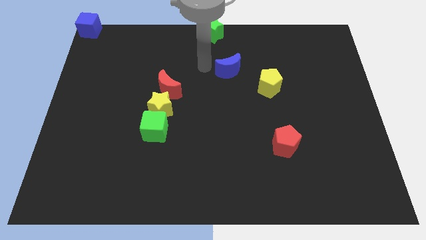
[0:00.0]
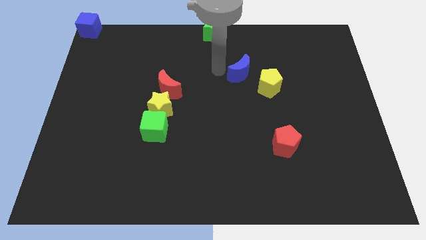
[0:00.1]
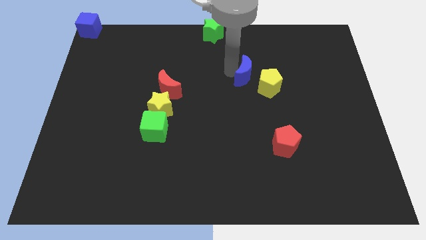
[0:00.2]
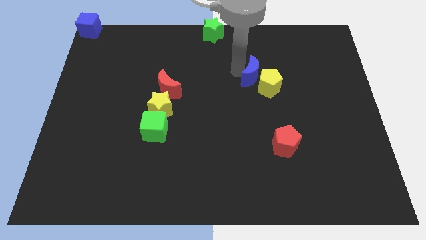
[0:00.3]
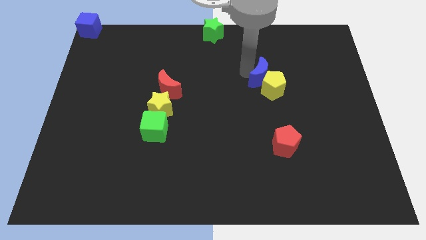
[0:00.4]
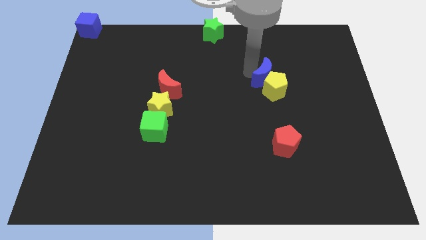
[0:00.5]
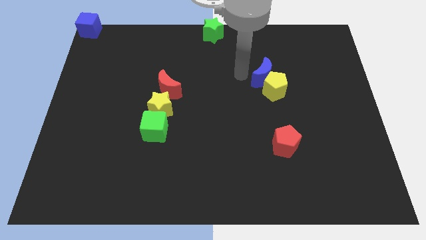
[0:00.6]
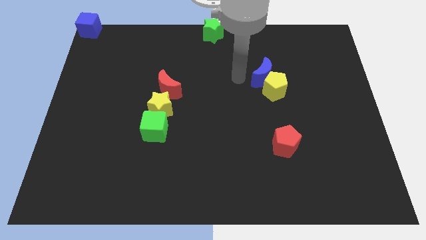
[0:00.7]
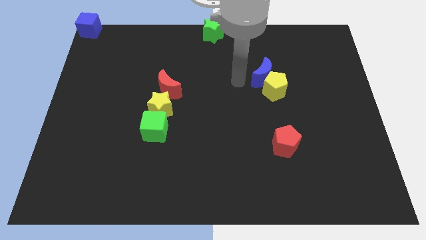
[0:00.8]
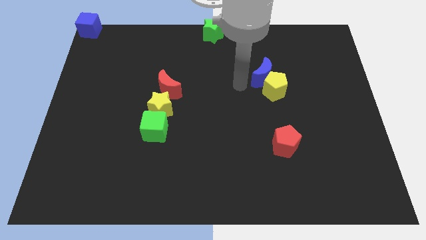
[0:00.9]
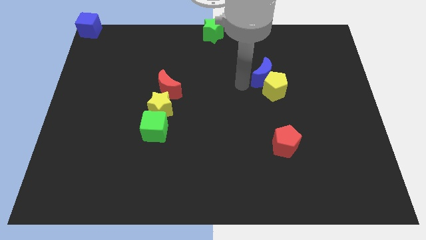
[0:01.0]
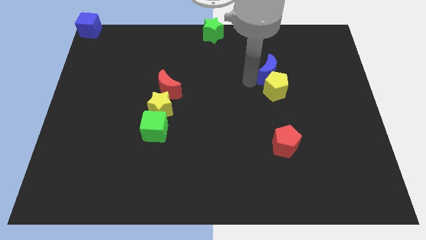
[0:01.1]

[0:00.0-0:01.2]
move the blue crescent to the left of the yellow pentagon

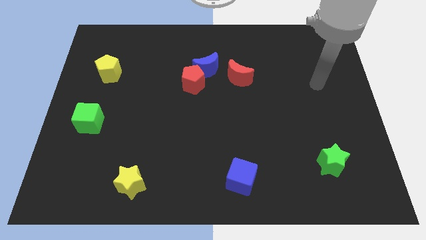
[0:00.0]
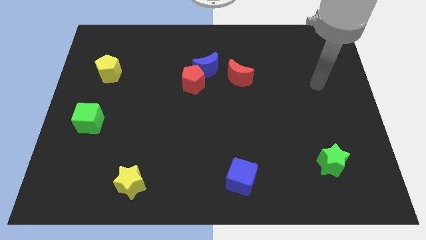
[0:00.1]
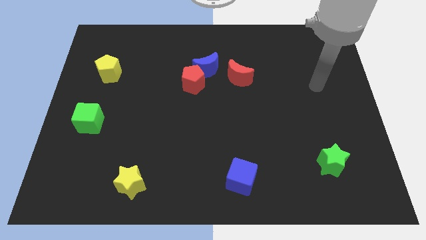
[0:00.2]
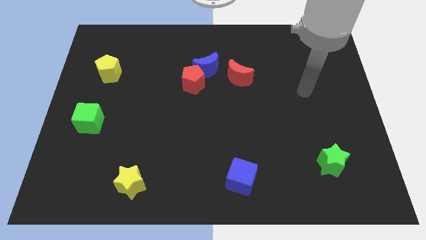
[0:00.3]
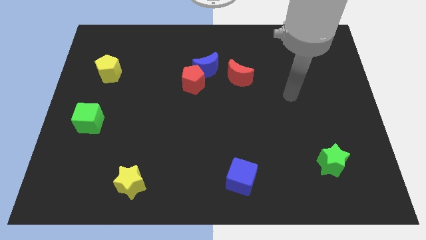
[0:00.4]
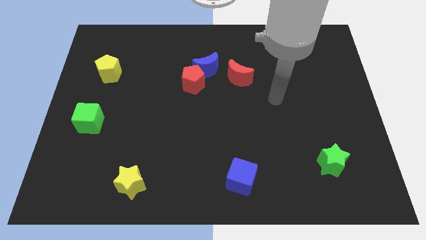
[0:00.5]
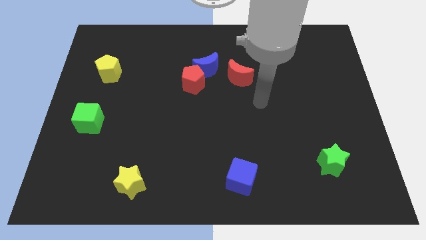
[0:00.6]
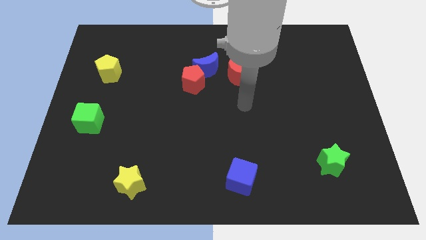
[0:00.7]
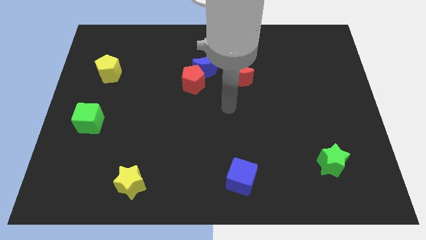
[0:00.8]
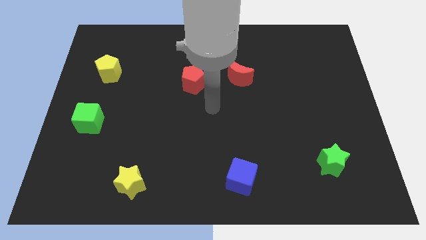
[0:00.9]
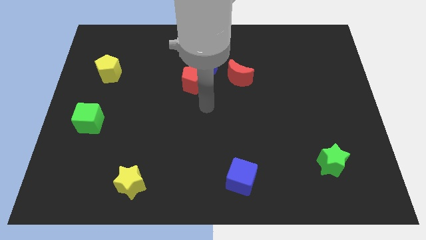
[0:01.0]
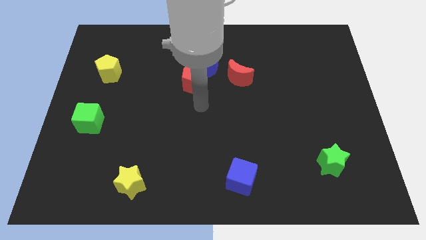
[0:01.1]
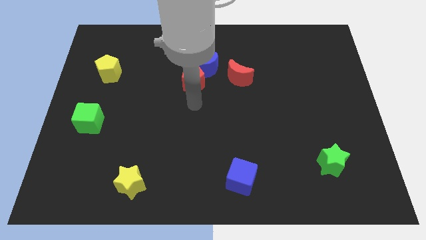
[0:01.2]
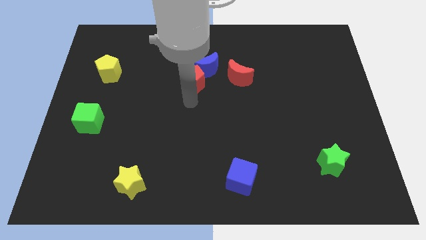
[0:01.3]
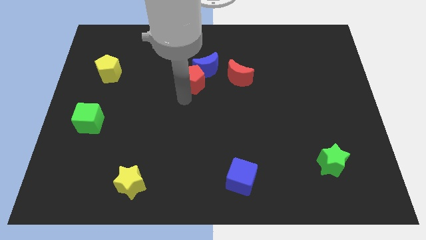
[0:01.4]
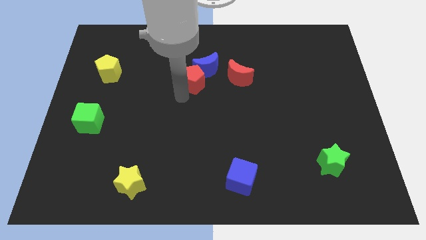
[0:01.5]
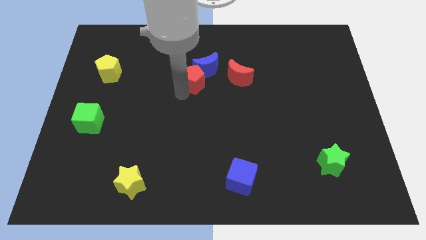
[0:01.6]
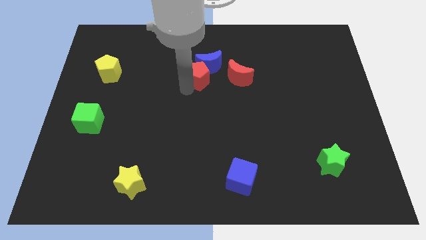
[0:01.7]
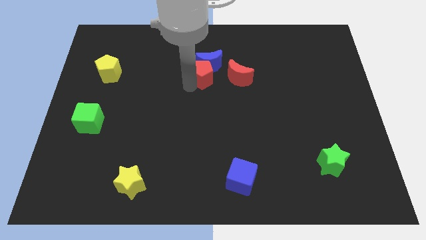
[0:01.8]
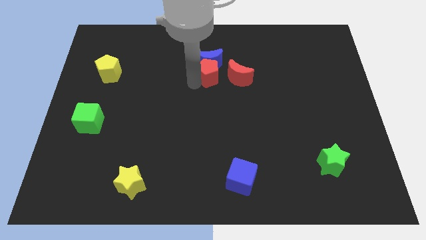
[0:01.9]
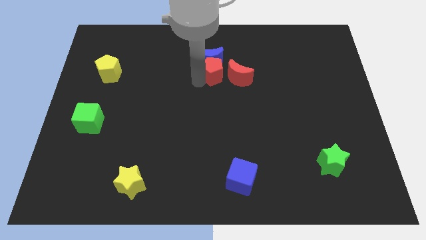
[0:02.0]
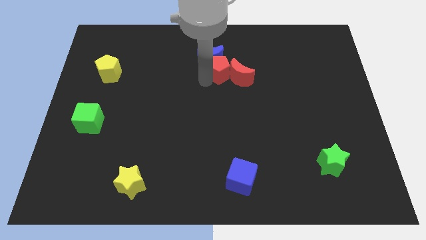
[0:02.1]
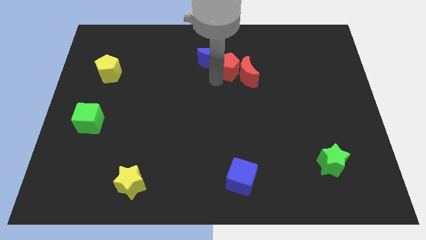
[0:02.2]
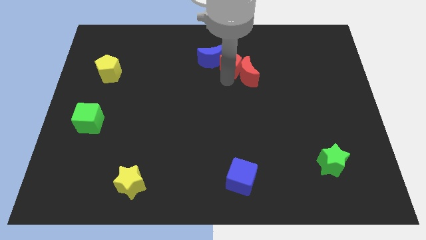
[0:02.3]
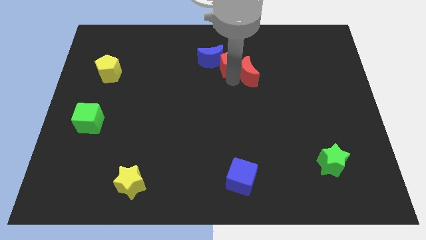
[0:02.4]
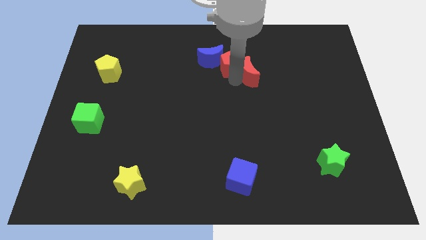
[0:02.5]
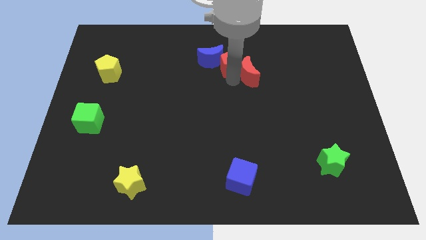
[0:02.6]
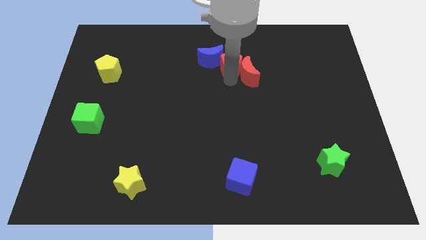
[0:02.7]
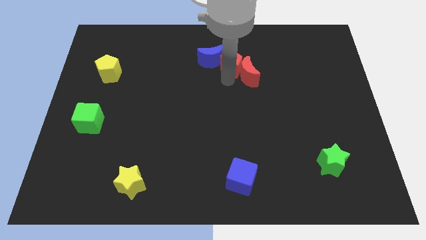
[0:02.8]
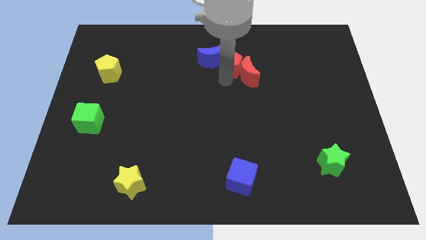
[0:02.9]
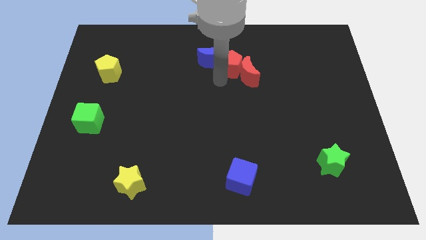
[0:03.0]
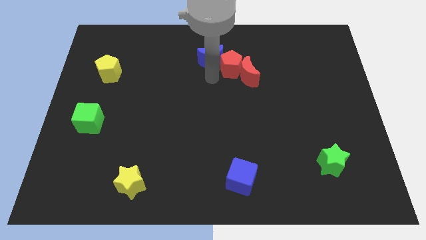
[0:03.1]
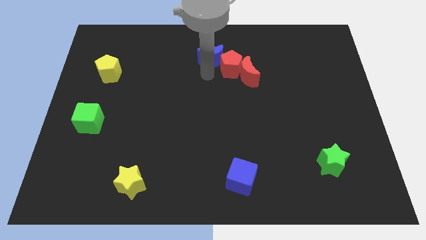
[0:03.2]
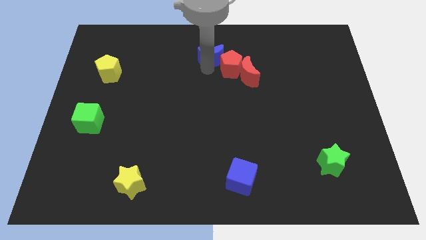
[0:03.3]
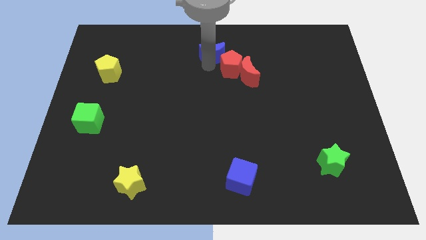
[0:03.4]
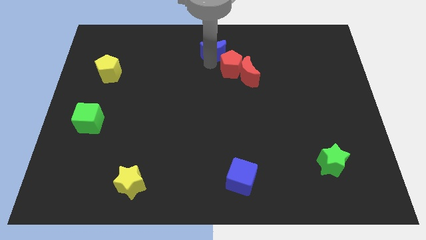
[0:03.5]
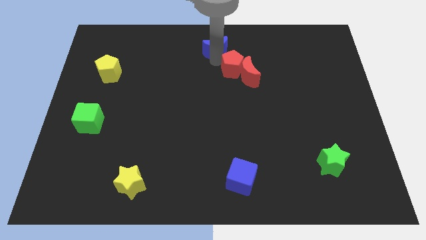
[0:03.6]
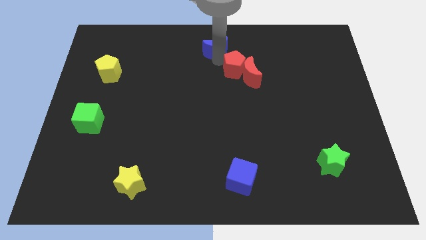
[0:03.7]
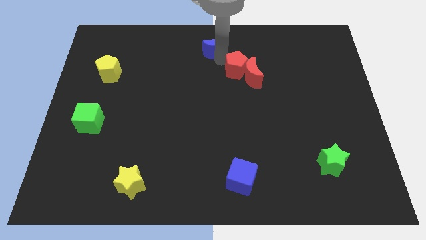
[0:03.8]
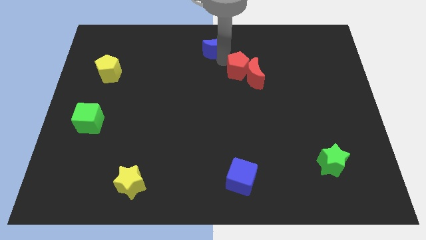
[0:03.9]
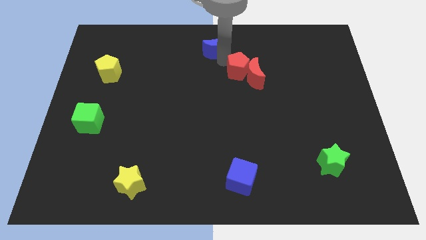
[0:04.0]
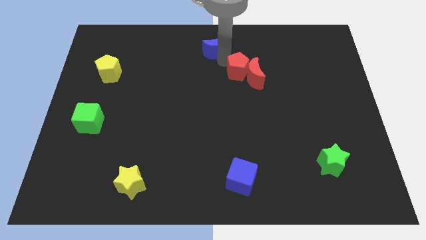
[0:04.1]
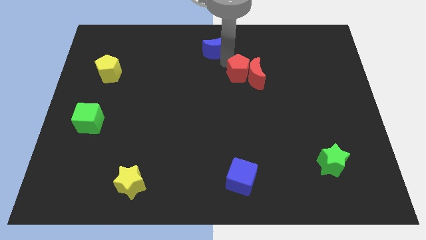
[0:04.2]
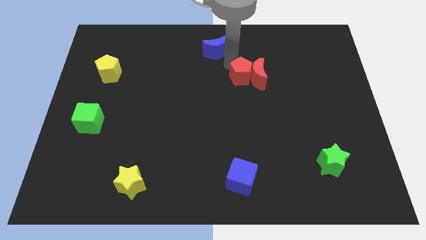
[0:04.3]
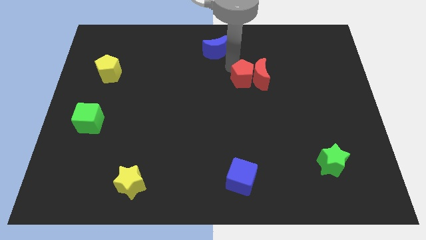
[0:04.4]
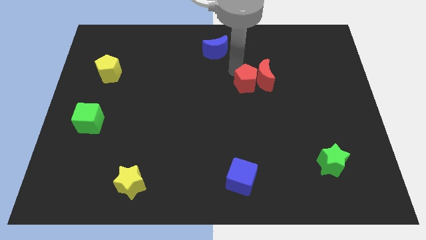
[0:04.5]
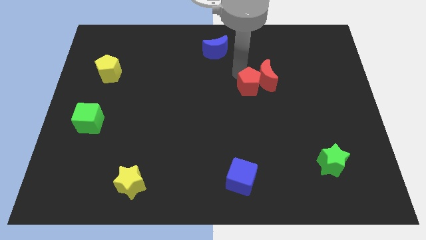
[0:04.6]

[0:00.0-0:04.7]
separate the red blocks from the blue moon

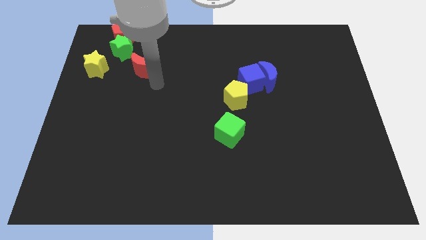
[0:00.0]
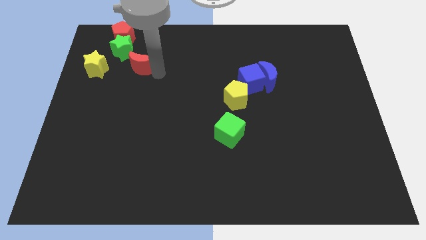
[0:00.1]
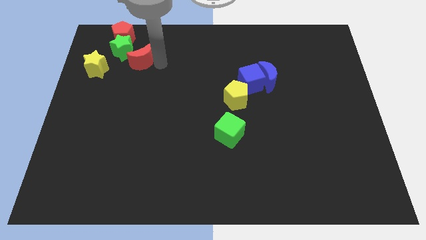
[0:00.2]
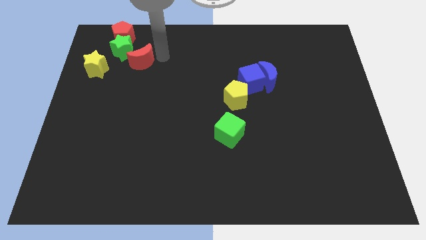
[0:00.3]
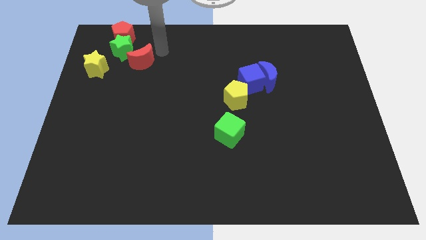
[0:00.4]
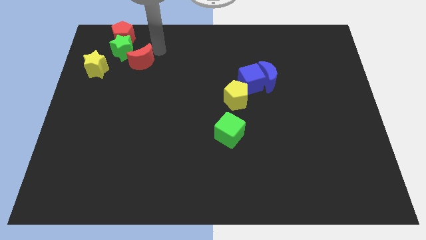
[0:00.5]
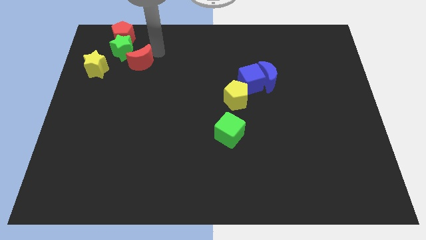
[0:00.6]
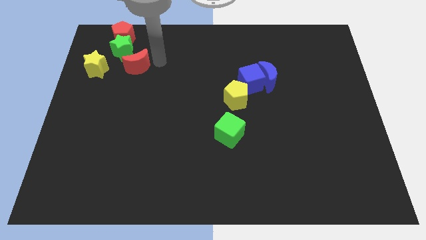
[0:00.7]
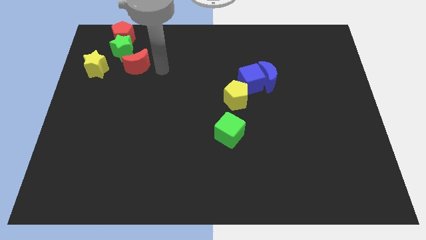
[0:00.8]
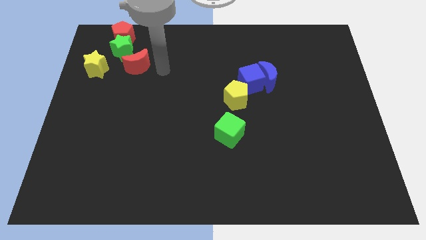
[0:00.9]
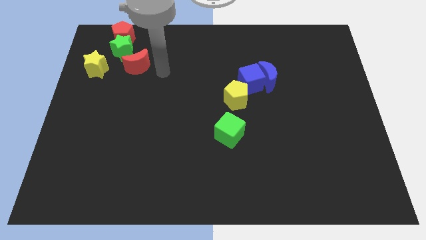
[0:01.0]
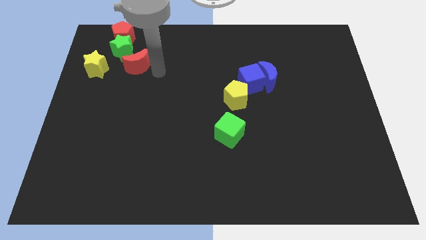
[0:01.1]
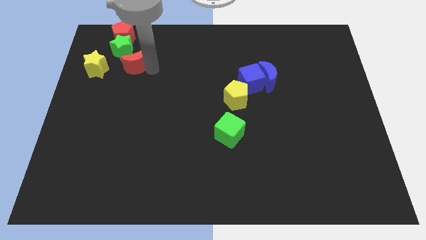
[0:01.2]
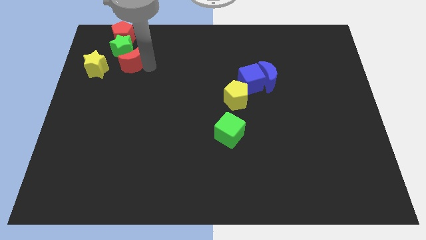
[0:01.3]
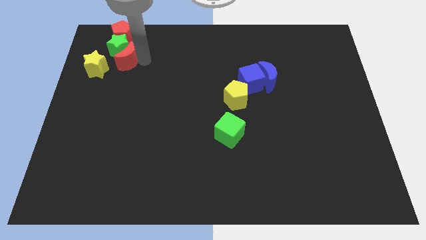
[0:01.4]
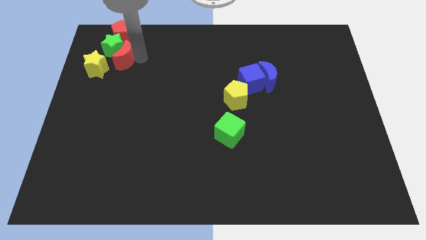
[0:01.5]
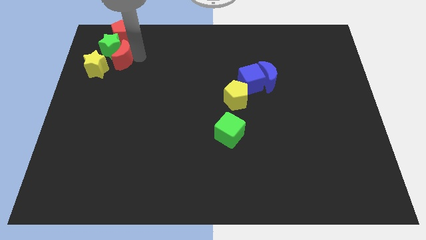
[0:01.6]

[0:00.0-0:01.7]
push the red moon into the green star

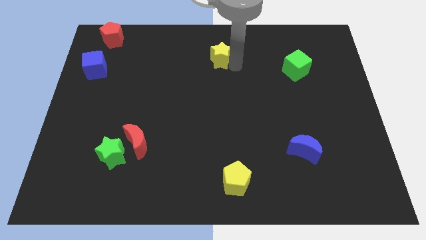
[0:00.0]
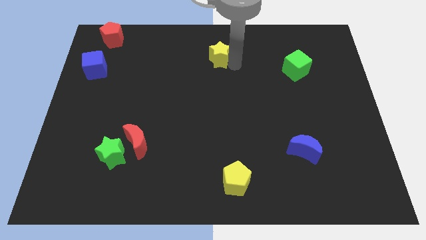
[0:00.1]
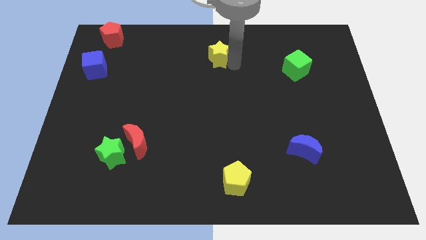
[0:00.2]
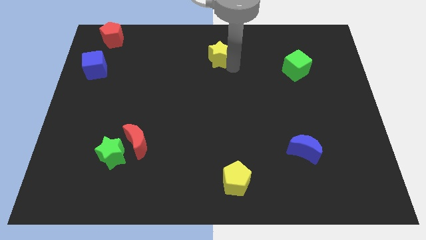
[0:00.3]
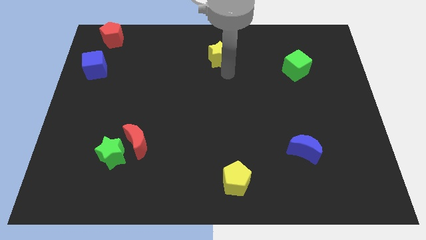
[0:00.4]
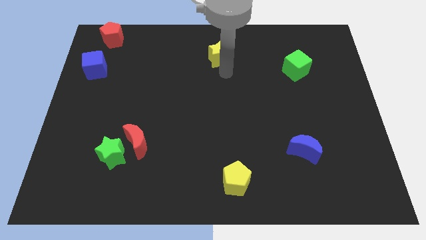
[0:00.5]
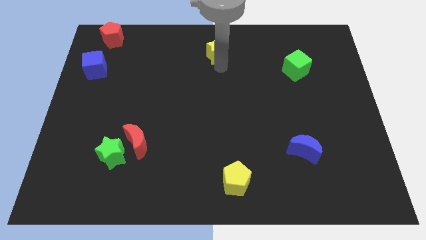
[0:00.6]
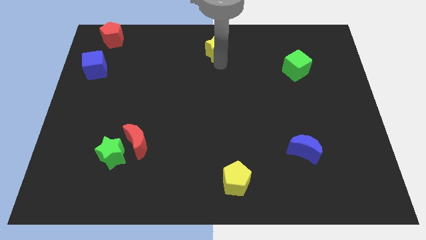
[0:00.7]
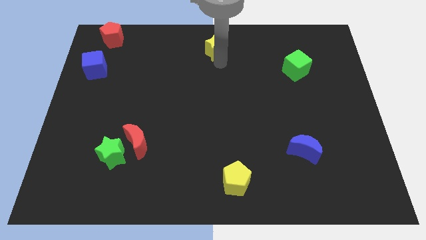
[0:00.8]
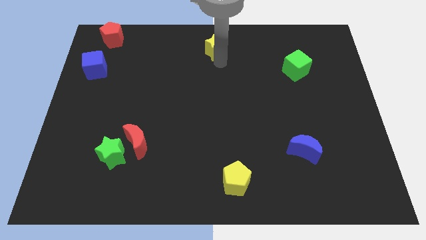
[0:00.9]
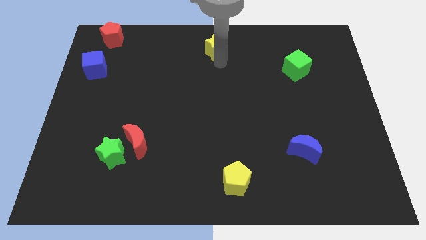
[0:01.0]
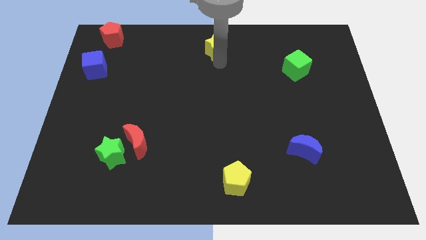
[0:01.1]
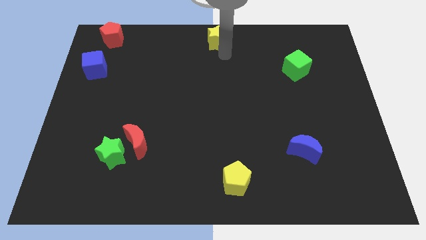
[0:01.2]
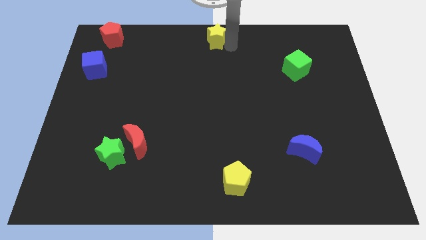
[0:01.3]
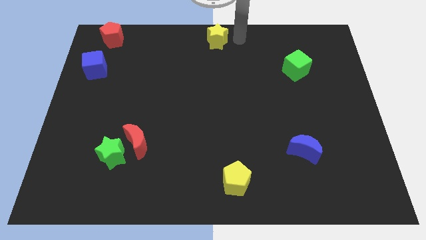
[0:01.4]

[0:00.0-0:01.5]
move the yellow star to the top center of the board
